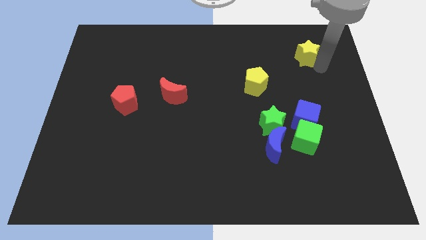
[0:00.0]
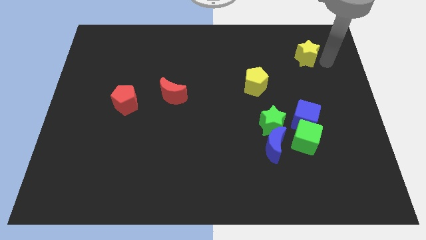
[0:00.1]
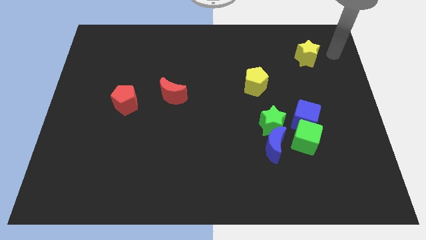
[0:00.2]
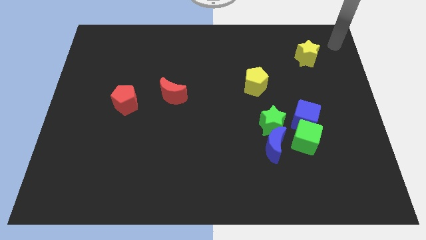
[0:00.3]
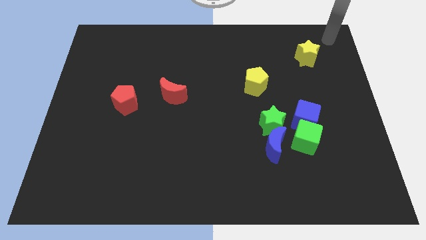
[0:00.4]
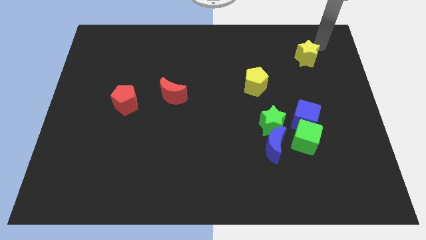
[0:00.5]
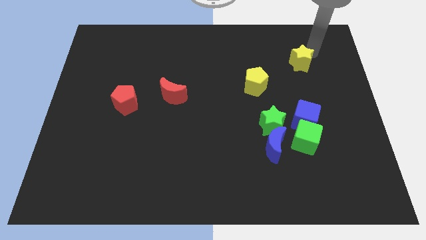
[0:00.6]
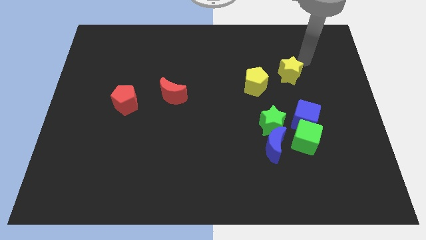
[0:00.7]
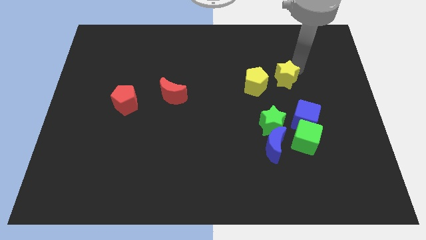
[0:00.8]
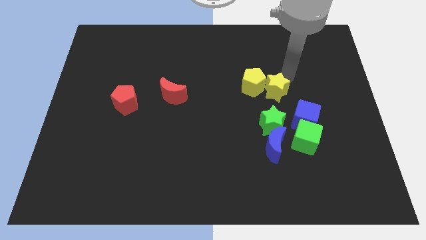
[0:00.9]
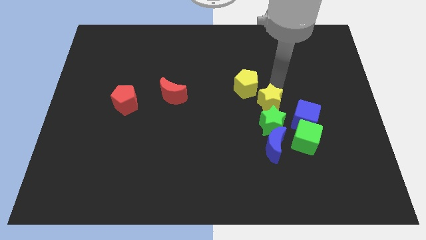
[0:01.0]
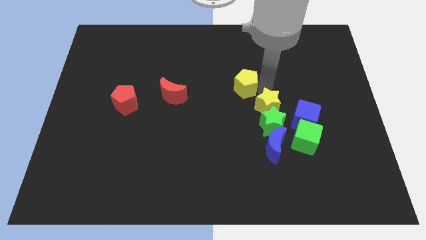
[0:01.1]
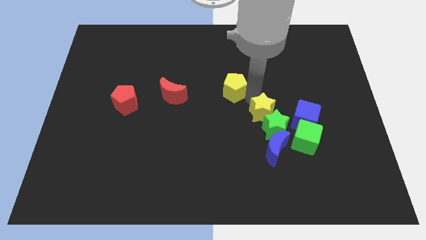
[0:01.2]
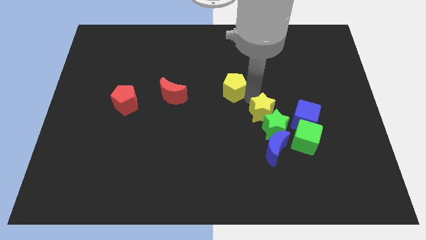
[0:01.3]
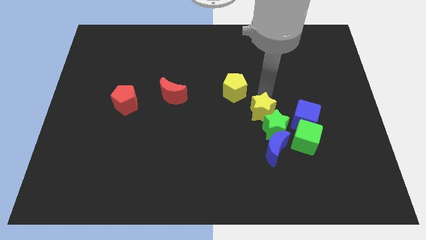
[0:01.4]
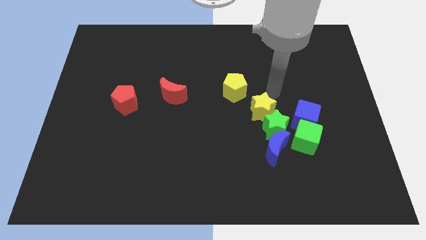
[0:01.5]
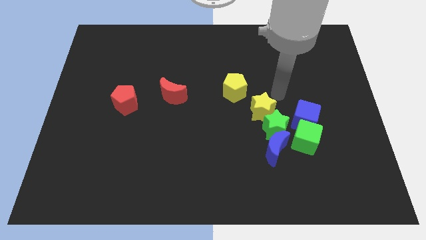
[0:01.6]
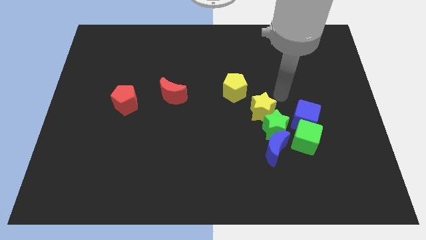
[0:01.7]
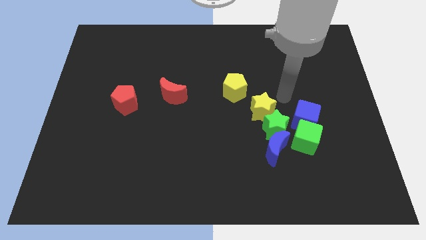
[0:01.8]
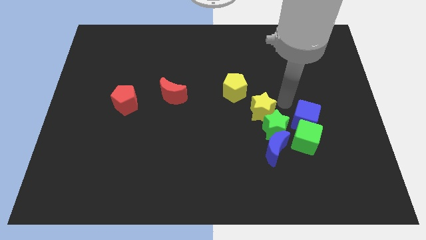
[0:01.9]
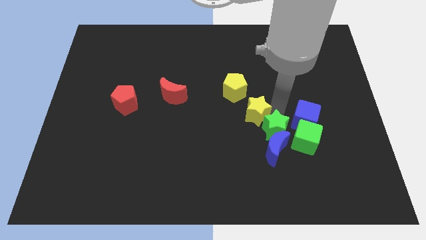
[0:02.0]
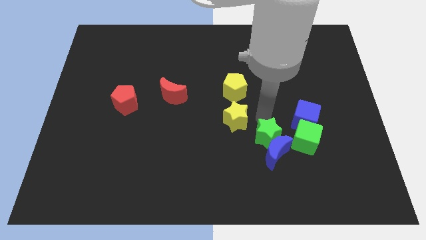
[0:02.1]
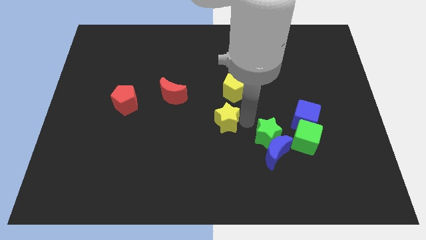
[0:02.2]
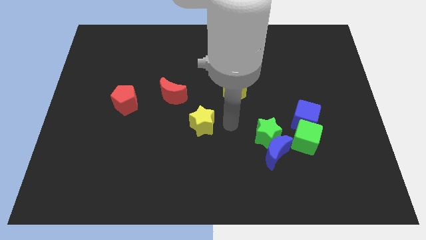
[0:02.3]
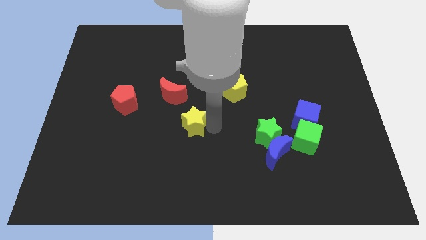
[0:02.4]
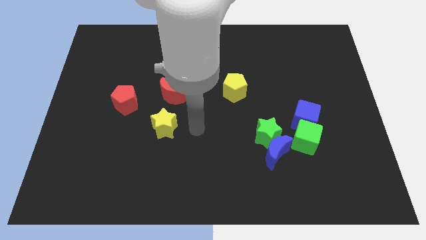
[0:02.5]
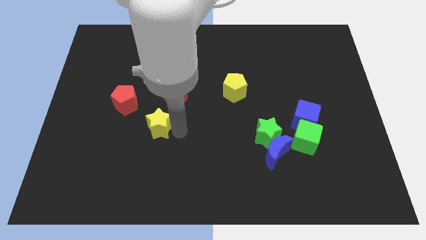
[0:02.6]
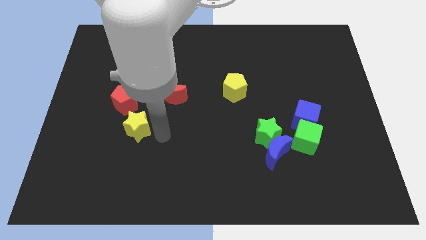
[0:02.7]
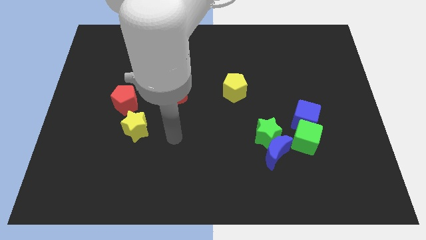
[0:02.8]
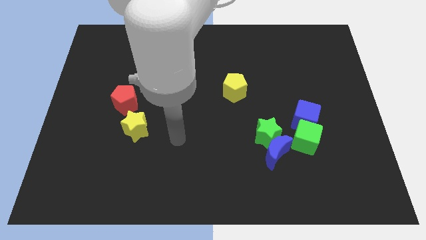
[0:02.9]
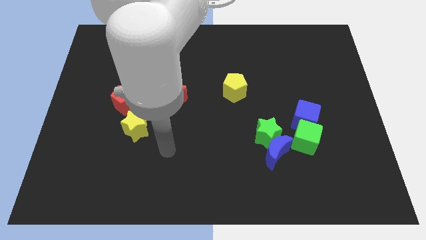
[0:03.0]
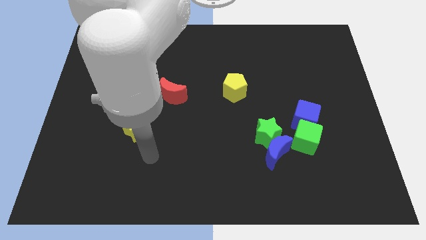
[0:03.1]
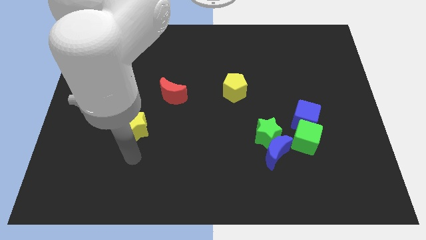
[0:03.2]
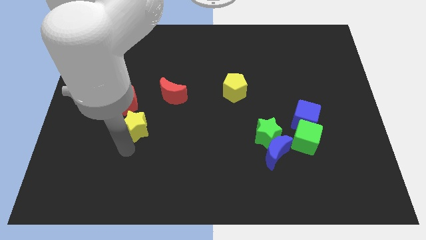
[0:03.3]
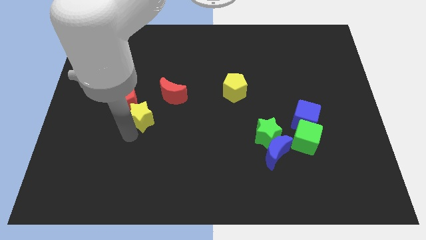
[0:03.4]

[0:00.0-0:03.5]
push the yellow star to the bottom right side of the red pentagon

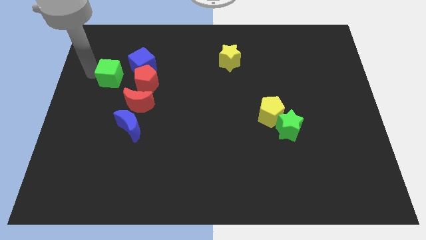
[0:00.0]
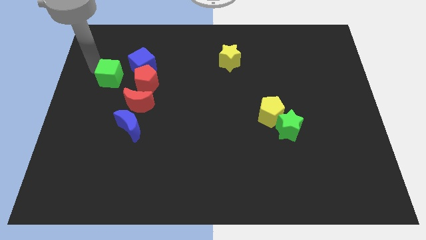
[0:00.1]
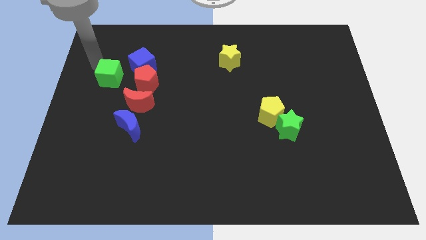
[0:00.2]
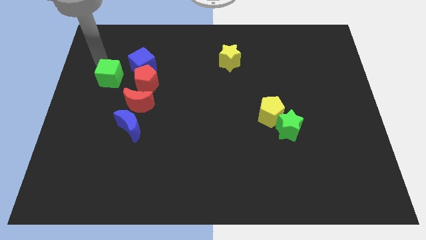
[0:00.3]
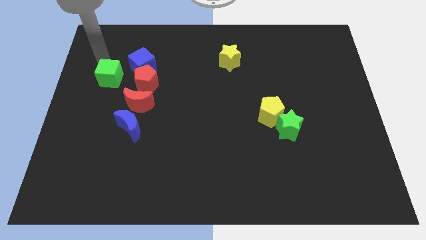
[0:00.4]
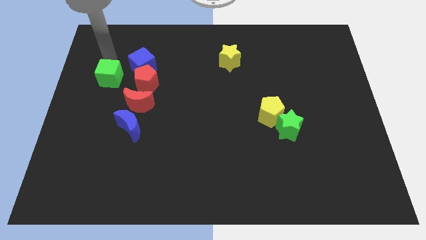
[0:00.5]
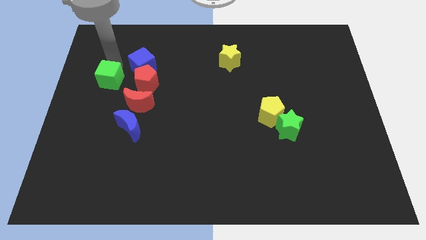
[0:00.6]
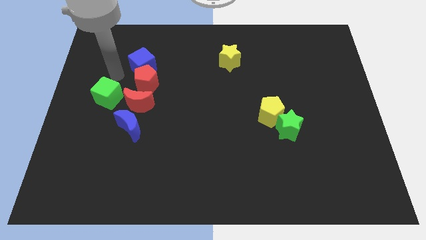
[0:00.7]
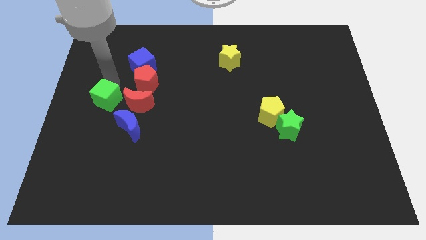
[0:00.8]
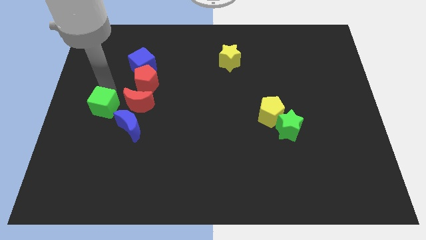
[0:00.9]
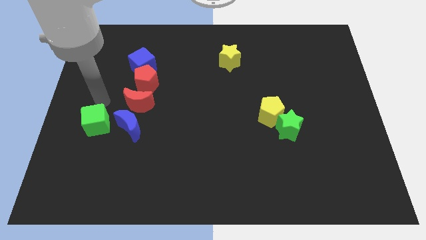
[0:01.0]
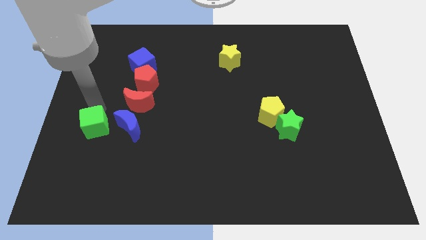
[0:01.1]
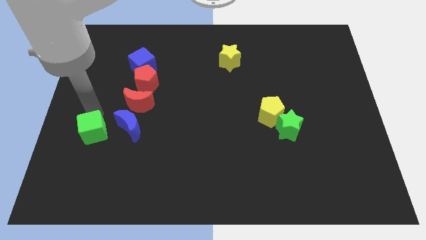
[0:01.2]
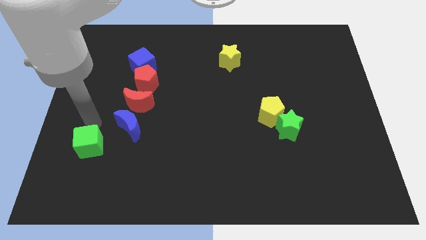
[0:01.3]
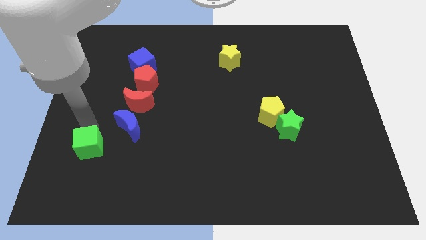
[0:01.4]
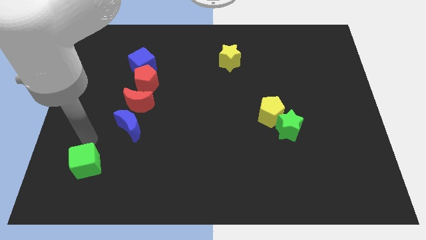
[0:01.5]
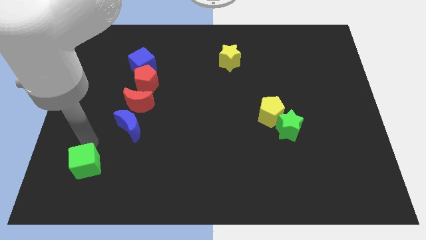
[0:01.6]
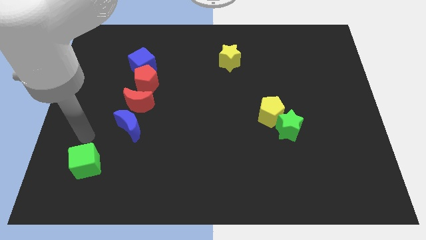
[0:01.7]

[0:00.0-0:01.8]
push the green cube towards the down of the board

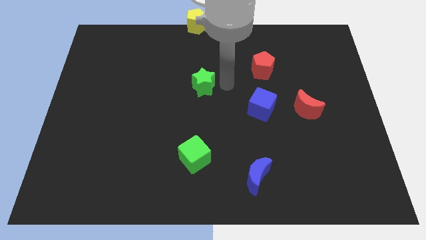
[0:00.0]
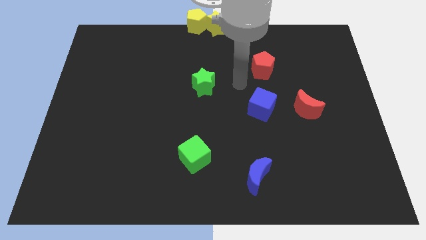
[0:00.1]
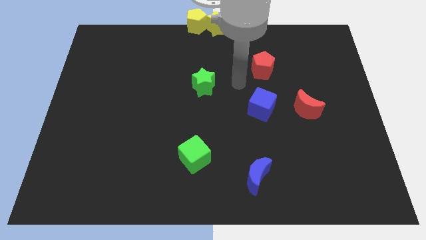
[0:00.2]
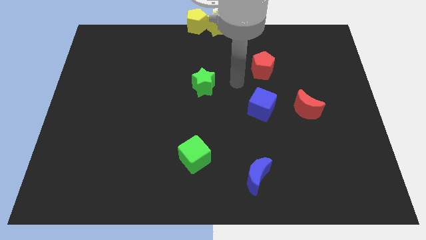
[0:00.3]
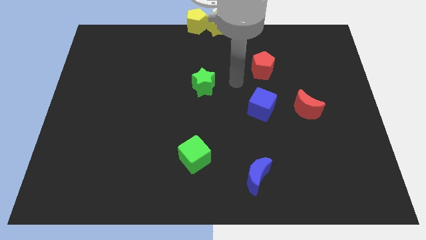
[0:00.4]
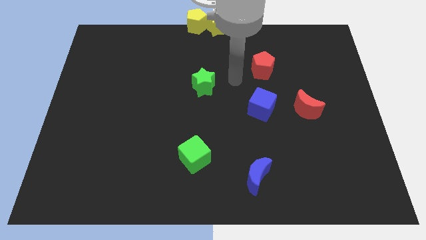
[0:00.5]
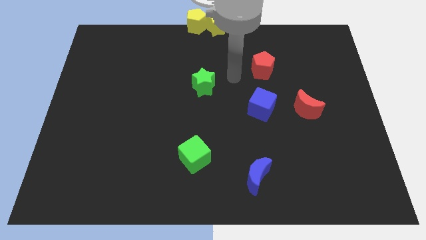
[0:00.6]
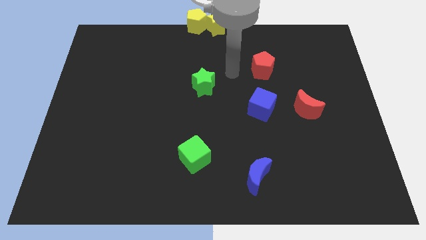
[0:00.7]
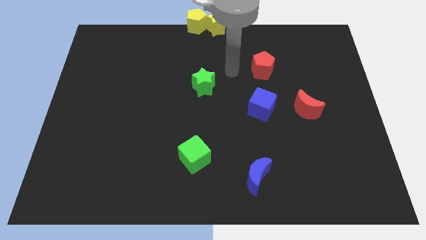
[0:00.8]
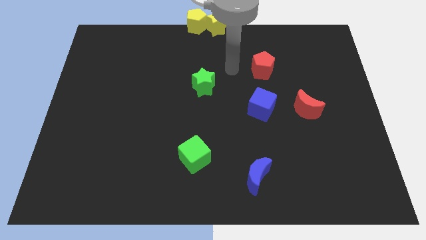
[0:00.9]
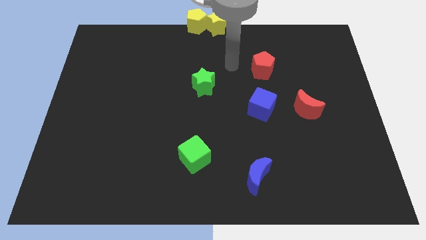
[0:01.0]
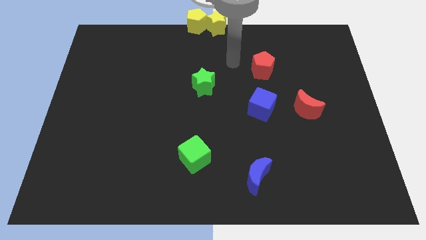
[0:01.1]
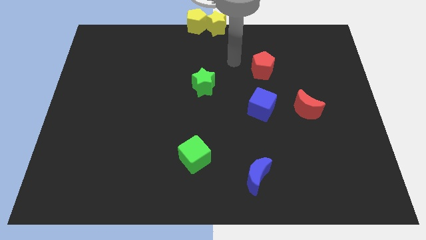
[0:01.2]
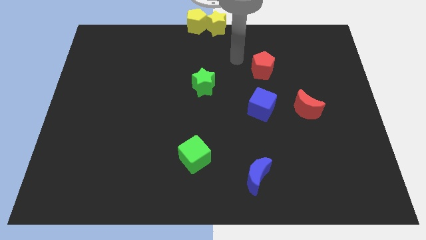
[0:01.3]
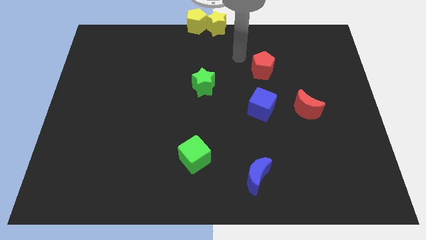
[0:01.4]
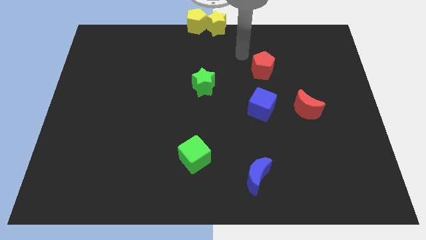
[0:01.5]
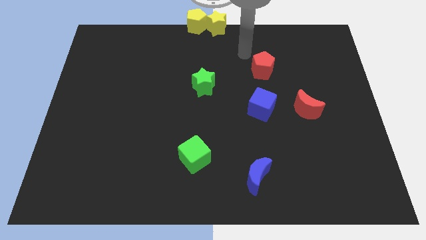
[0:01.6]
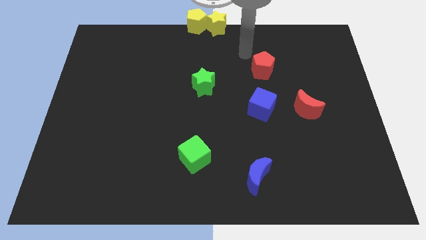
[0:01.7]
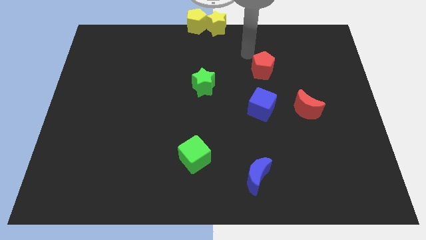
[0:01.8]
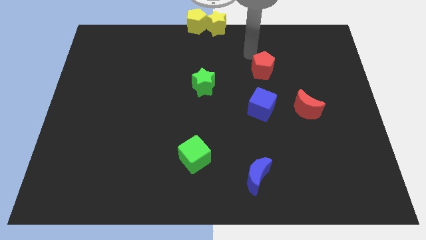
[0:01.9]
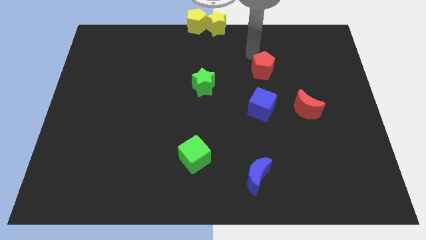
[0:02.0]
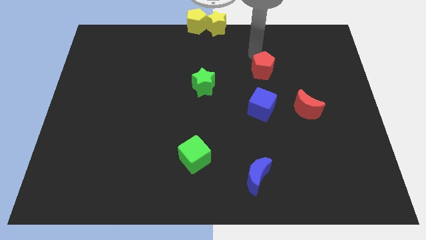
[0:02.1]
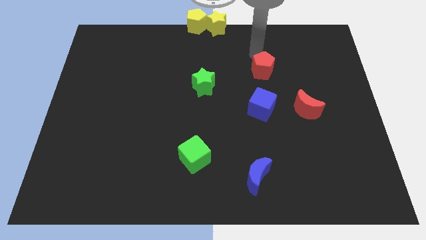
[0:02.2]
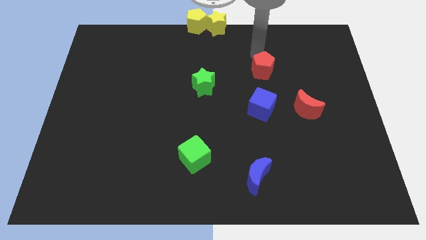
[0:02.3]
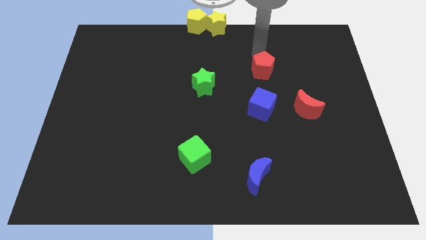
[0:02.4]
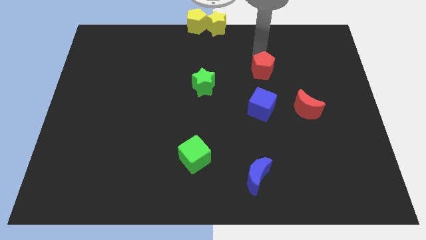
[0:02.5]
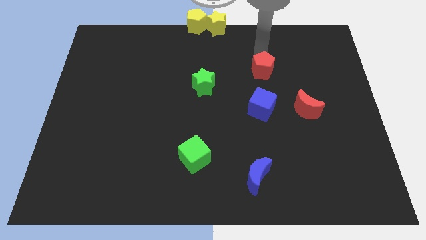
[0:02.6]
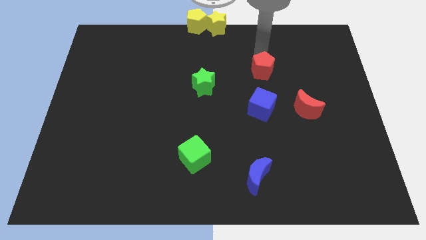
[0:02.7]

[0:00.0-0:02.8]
place the arm above the red pentagon

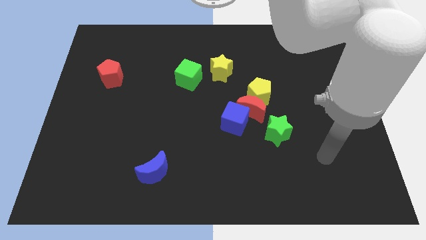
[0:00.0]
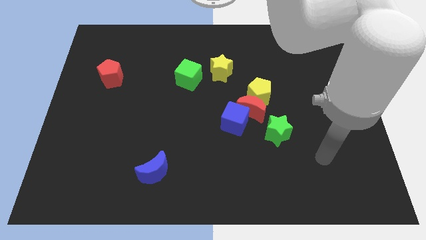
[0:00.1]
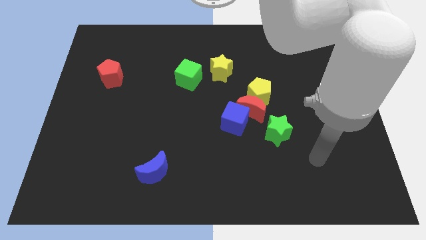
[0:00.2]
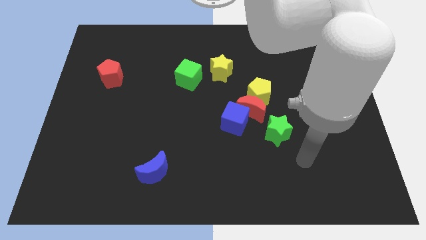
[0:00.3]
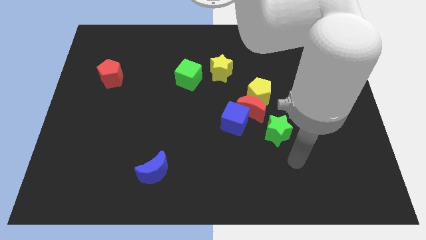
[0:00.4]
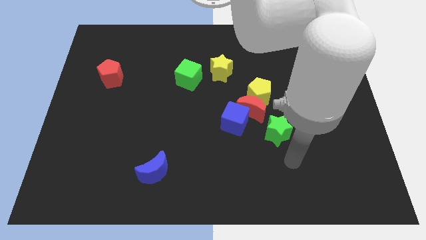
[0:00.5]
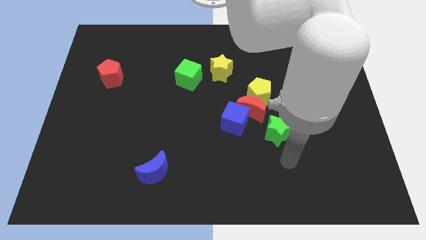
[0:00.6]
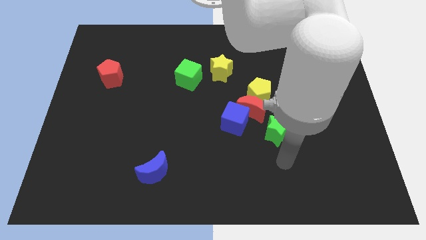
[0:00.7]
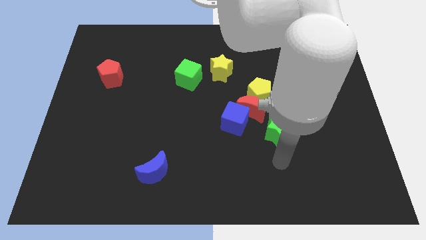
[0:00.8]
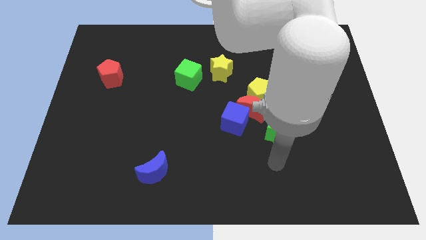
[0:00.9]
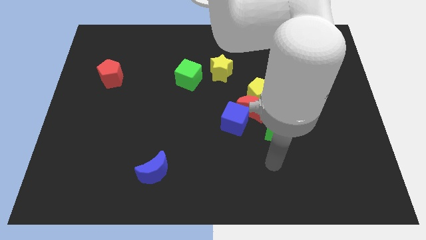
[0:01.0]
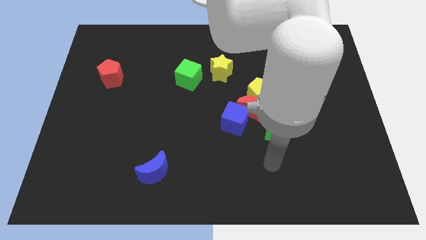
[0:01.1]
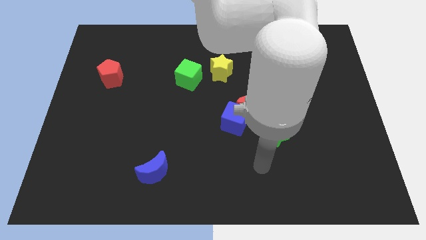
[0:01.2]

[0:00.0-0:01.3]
move your hand towards the left
